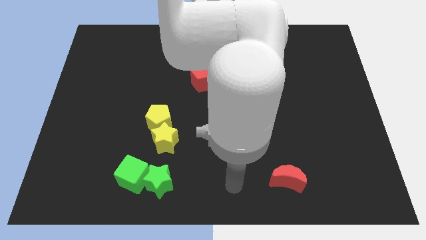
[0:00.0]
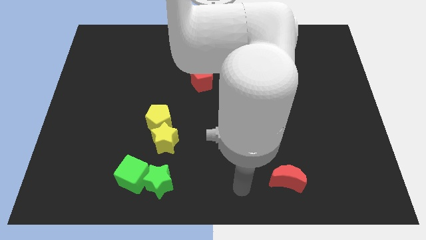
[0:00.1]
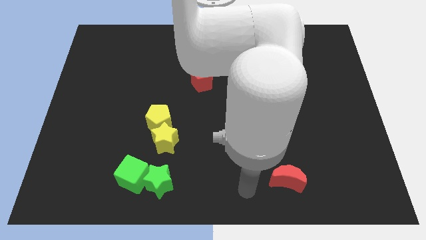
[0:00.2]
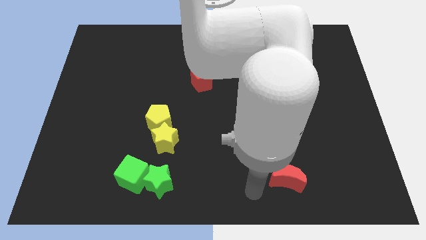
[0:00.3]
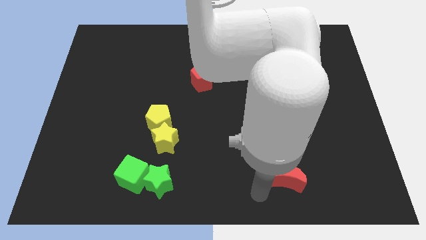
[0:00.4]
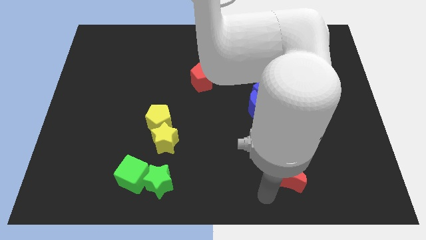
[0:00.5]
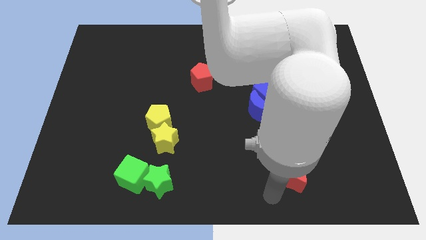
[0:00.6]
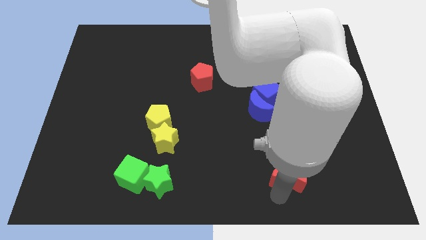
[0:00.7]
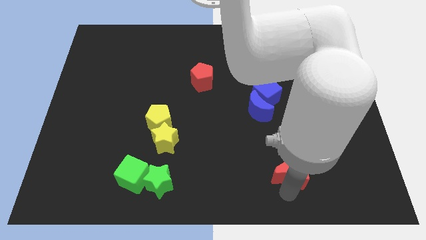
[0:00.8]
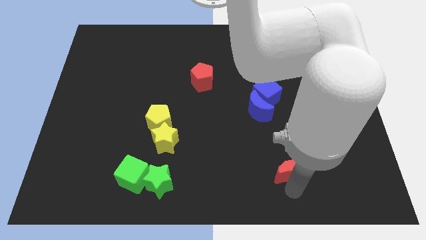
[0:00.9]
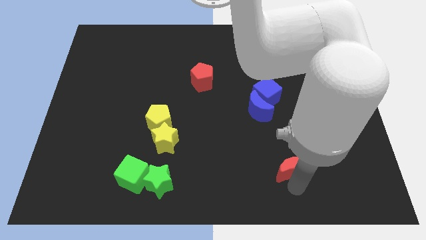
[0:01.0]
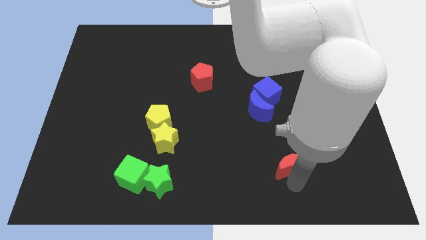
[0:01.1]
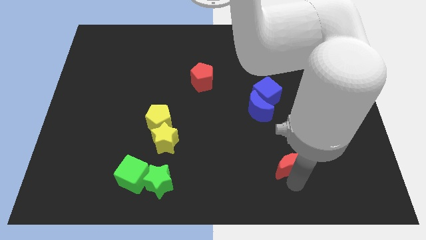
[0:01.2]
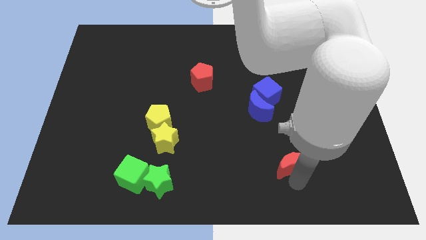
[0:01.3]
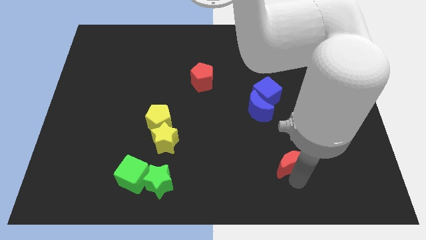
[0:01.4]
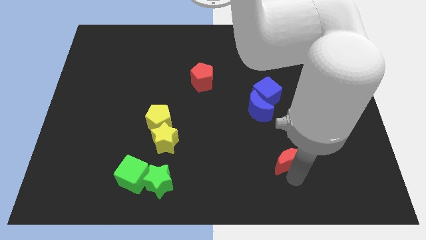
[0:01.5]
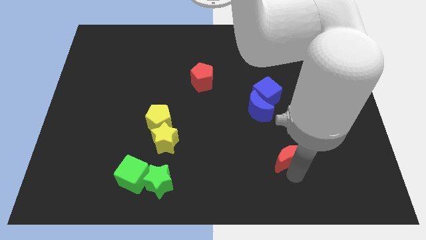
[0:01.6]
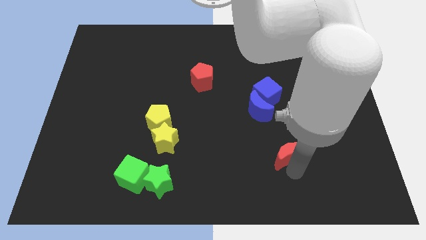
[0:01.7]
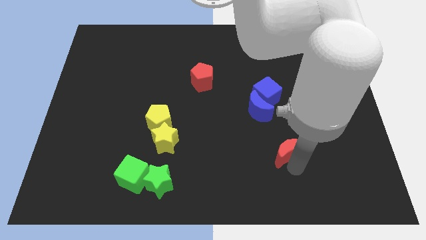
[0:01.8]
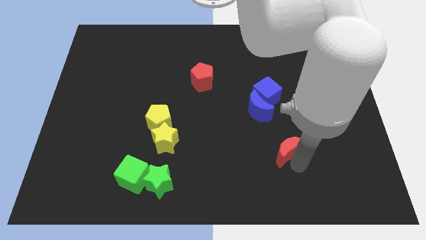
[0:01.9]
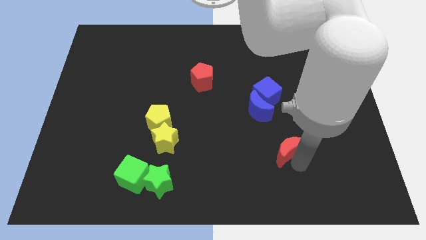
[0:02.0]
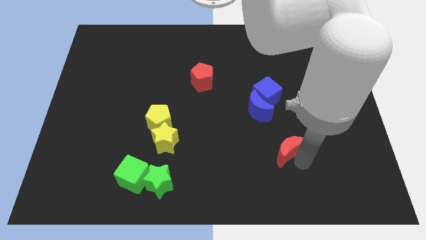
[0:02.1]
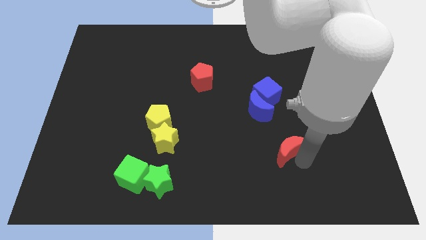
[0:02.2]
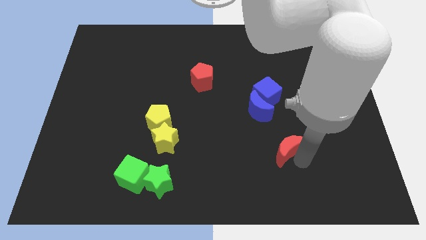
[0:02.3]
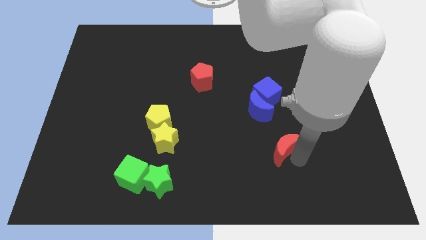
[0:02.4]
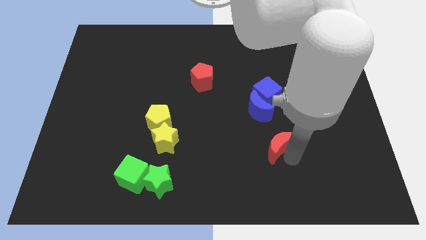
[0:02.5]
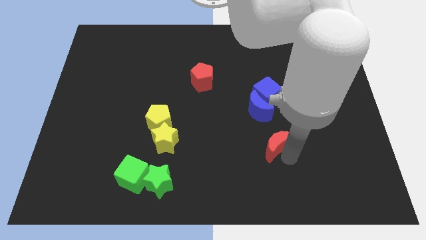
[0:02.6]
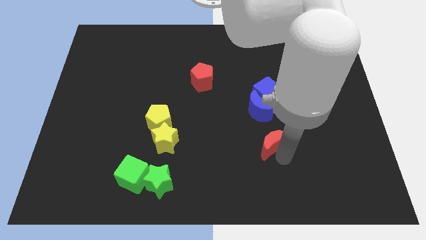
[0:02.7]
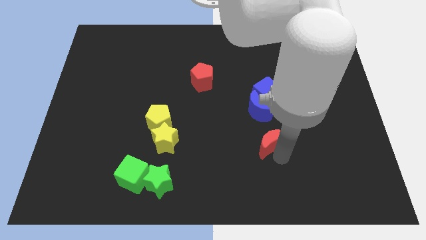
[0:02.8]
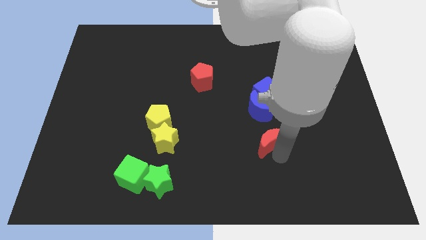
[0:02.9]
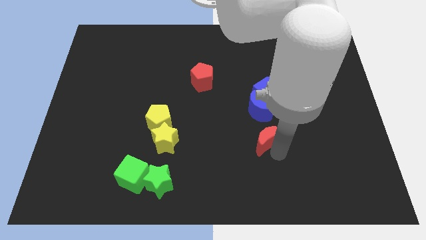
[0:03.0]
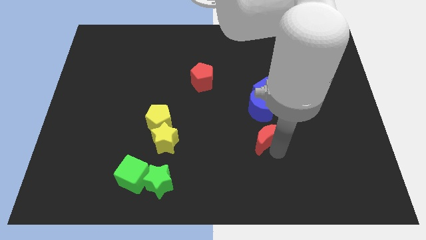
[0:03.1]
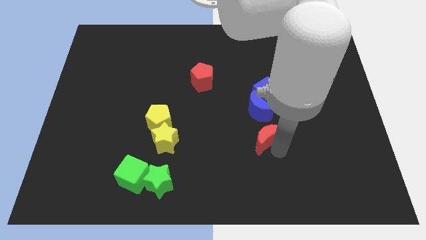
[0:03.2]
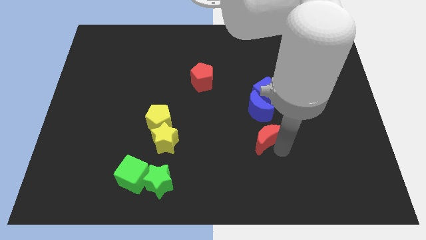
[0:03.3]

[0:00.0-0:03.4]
move the red crescent close to the blue crescent

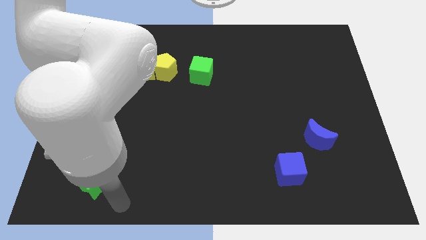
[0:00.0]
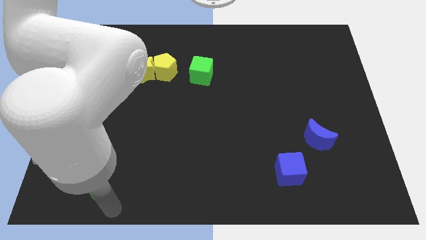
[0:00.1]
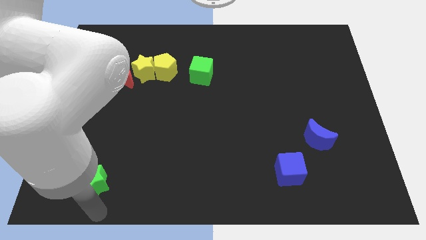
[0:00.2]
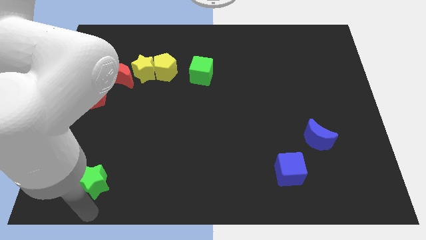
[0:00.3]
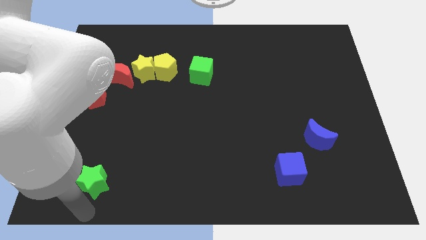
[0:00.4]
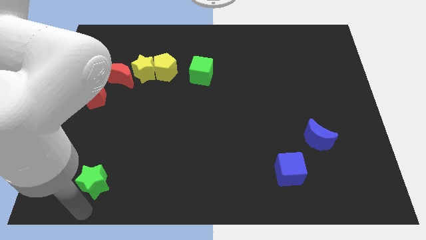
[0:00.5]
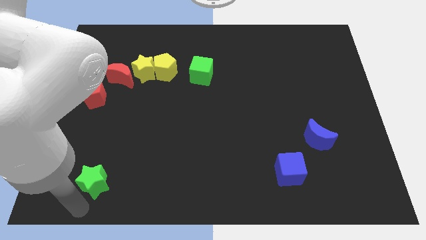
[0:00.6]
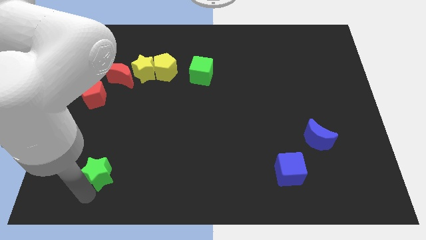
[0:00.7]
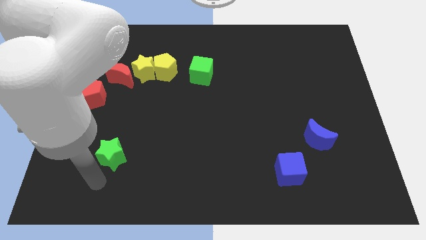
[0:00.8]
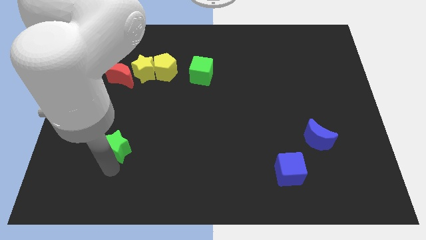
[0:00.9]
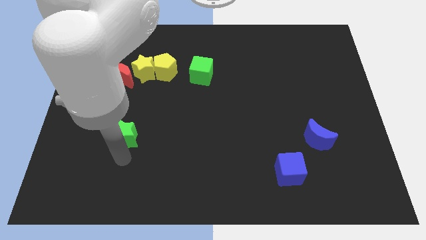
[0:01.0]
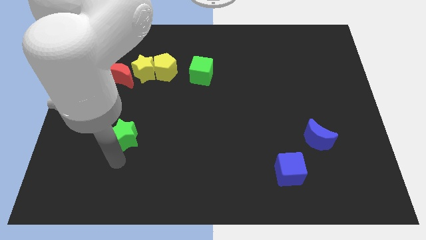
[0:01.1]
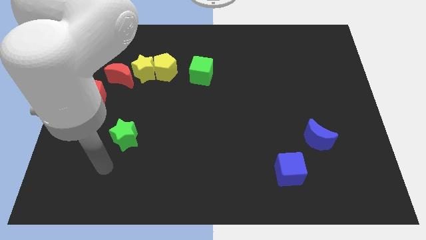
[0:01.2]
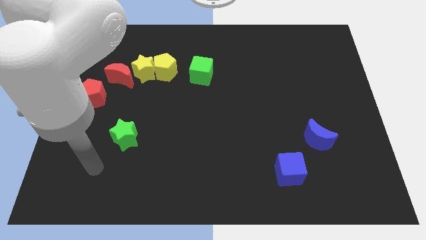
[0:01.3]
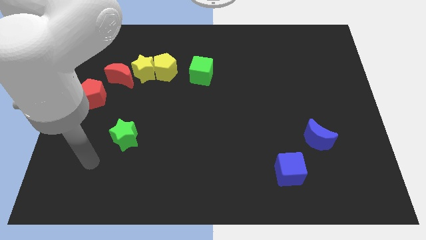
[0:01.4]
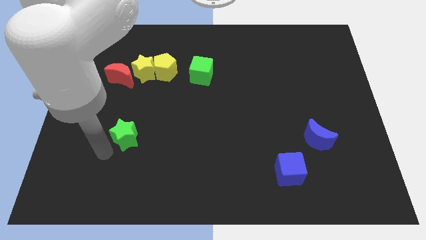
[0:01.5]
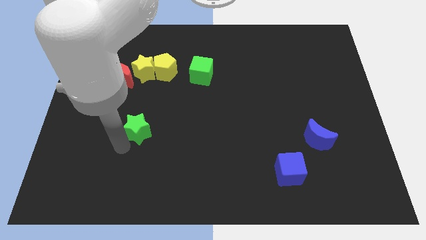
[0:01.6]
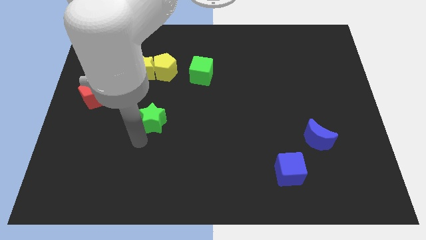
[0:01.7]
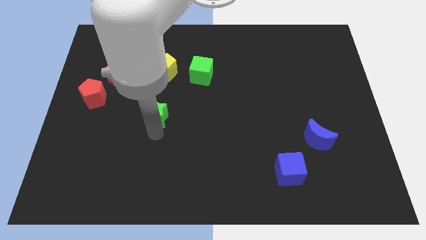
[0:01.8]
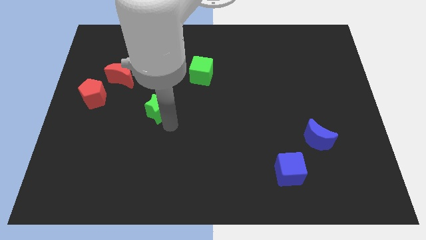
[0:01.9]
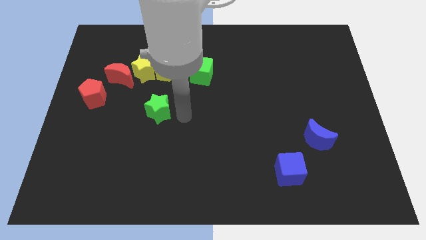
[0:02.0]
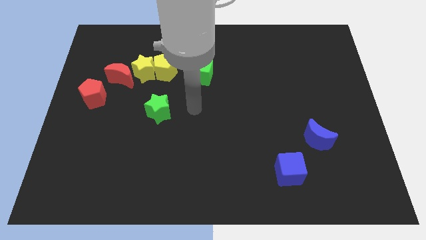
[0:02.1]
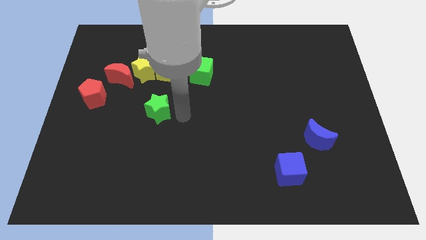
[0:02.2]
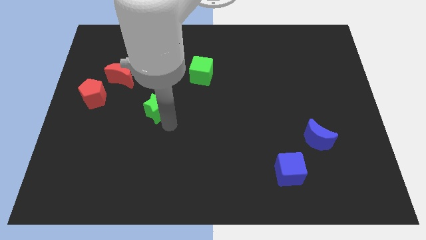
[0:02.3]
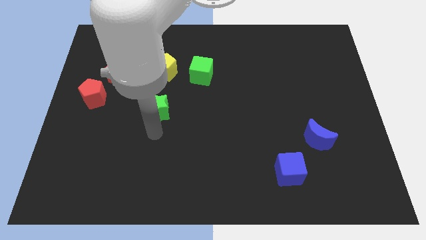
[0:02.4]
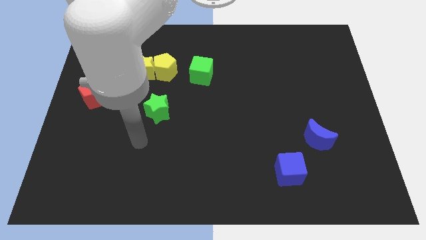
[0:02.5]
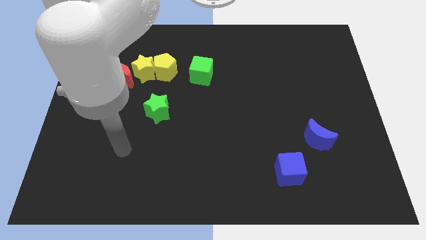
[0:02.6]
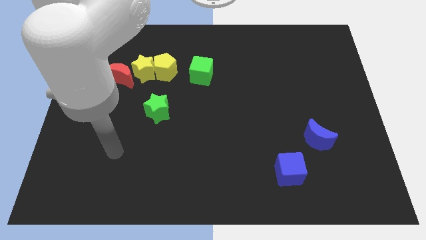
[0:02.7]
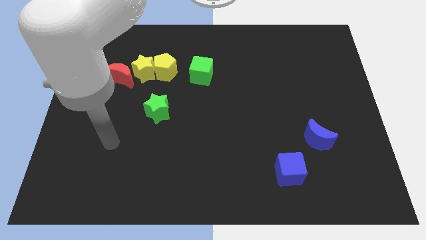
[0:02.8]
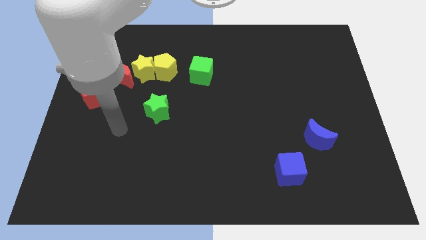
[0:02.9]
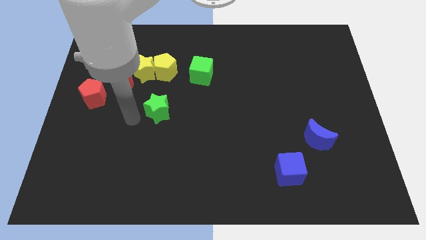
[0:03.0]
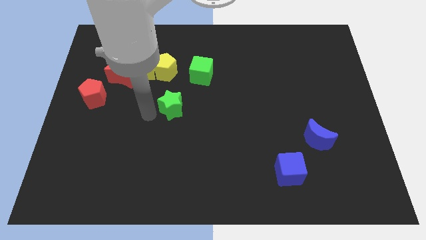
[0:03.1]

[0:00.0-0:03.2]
place the green star at the bottom of yellow blocks

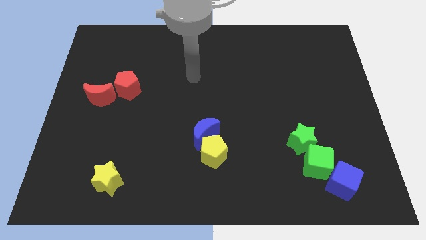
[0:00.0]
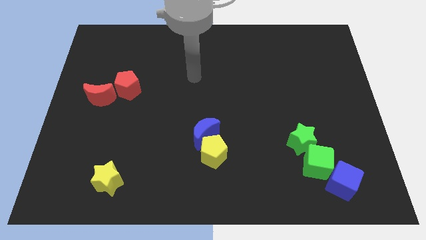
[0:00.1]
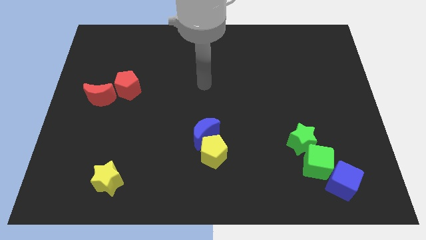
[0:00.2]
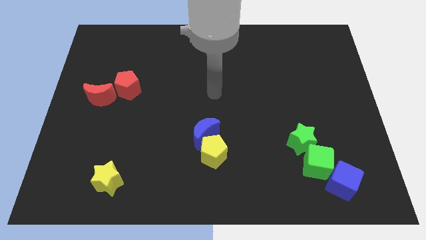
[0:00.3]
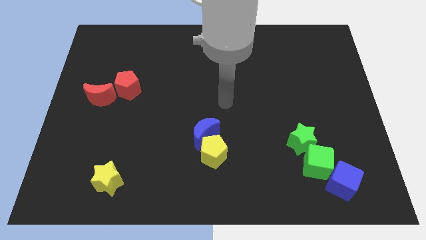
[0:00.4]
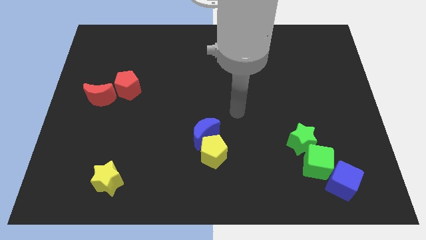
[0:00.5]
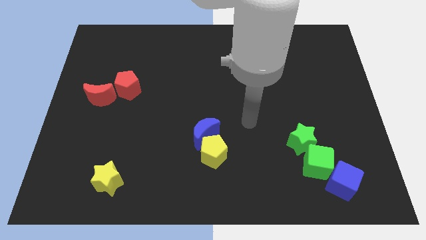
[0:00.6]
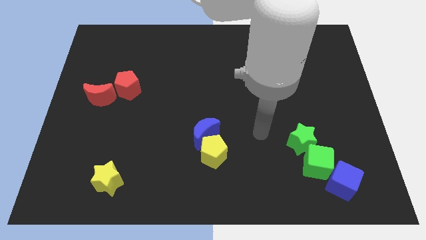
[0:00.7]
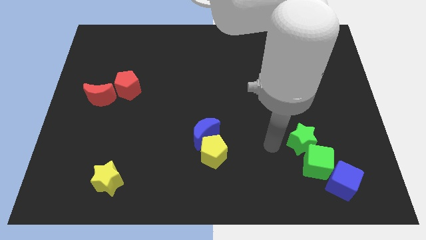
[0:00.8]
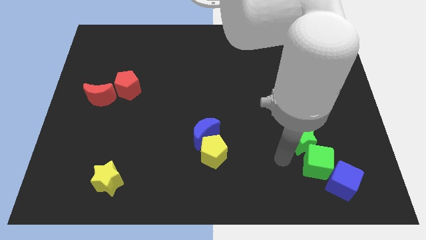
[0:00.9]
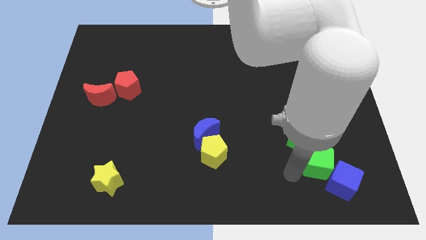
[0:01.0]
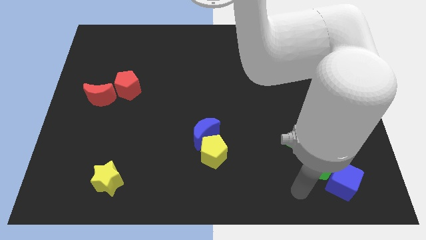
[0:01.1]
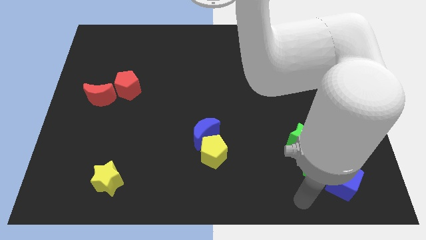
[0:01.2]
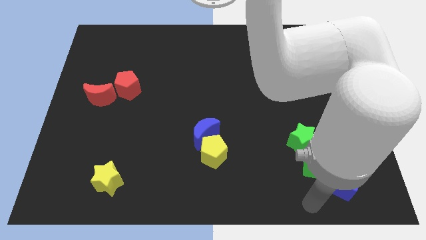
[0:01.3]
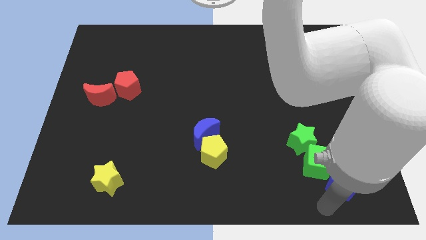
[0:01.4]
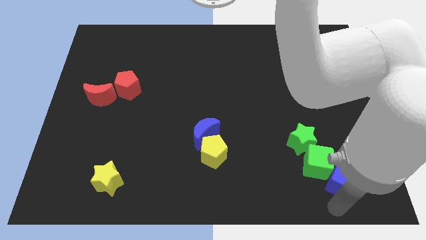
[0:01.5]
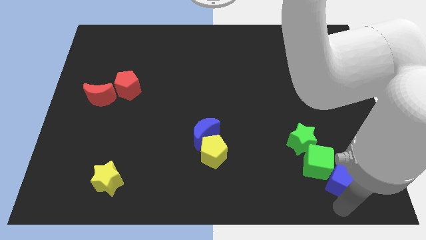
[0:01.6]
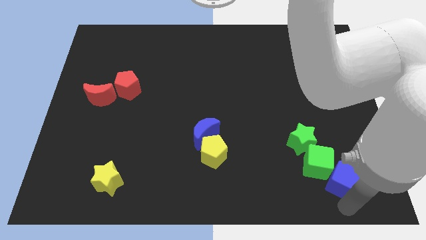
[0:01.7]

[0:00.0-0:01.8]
move the arm towards the bottom of the blue cube

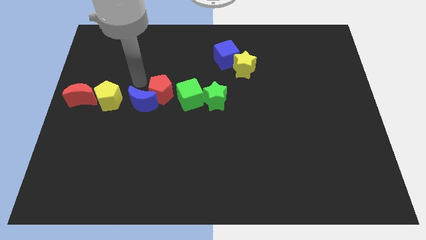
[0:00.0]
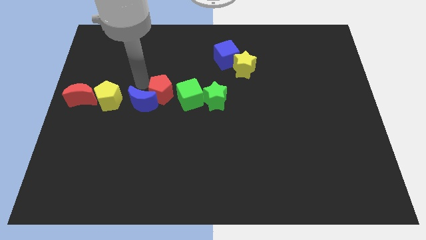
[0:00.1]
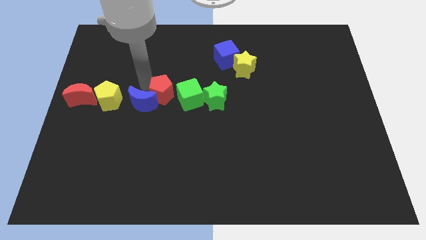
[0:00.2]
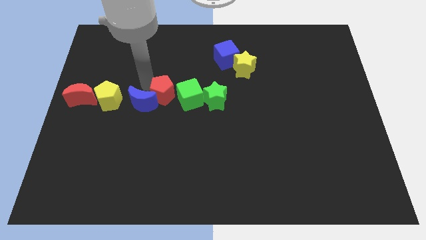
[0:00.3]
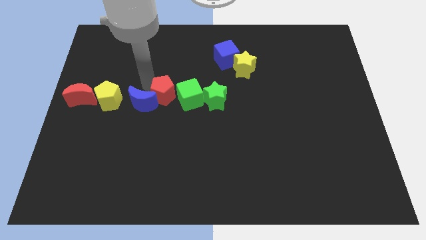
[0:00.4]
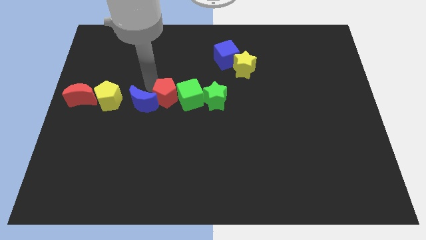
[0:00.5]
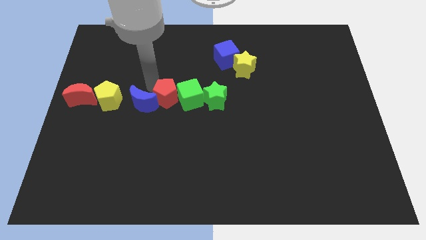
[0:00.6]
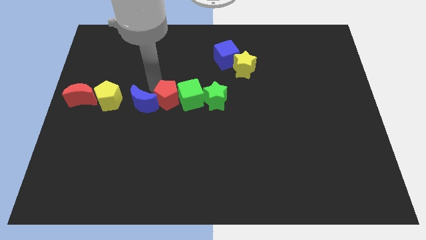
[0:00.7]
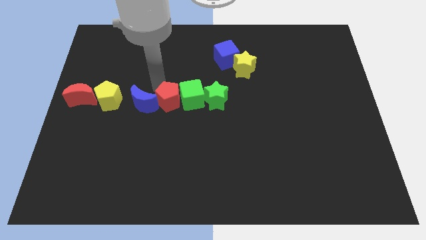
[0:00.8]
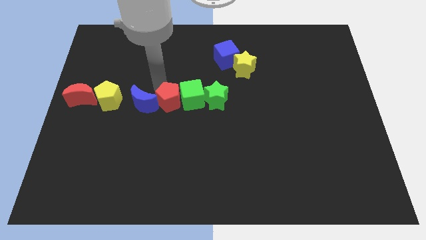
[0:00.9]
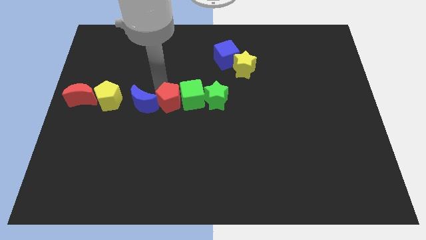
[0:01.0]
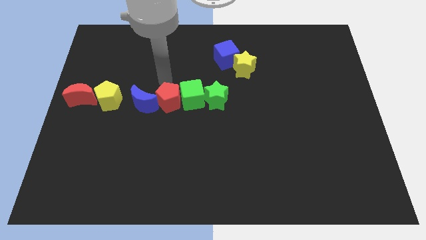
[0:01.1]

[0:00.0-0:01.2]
move the red pentagon to the left of the green cube
